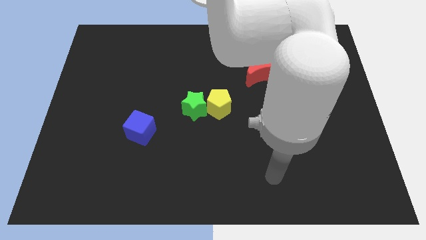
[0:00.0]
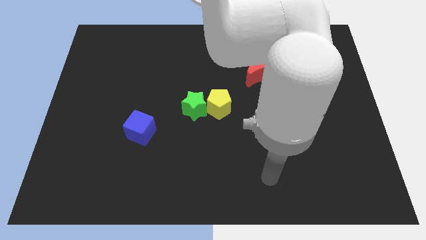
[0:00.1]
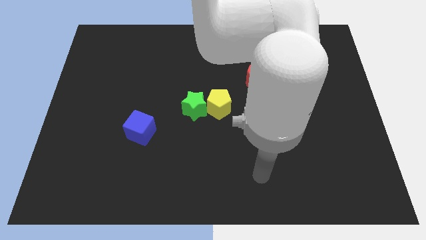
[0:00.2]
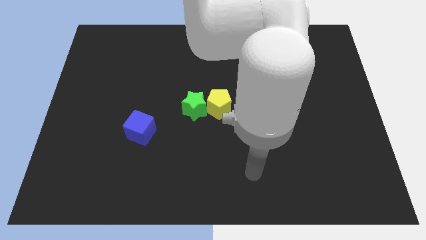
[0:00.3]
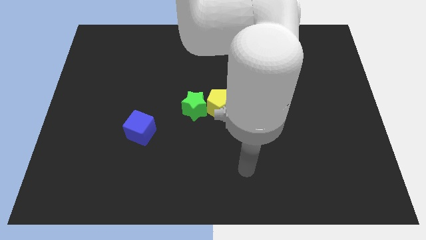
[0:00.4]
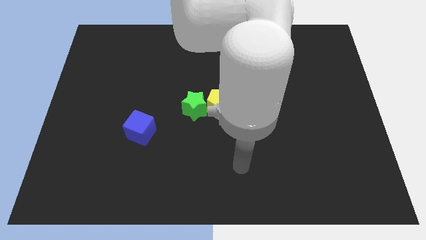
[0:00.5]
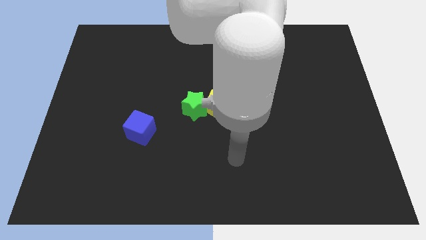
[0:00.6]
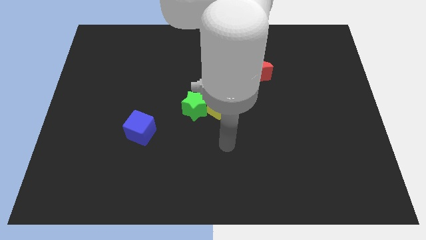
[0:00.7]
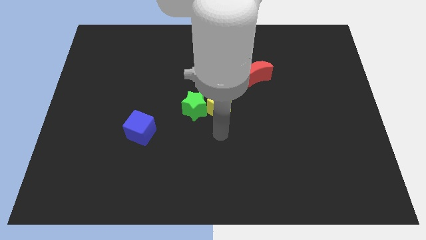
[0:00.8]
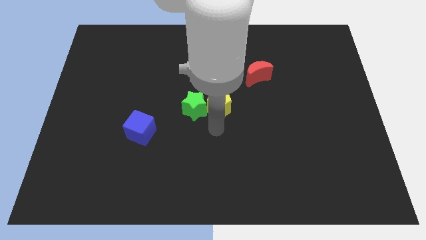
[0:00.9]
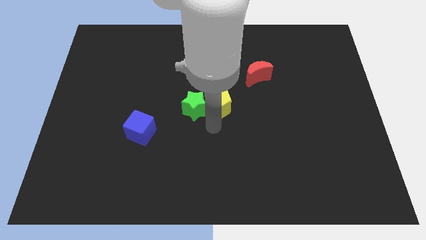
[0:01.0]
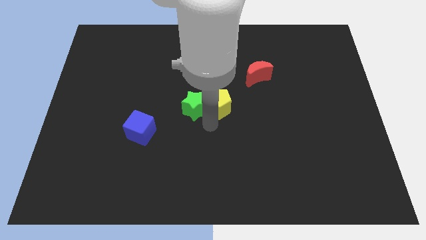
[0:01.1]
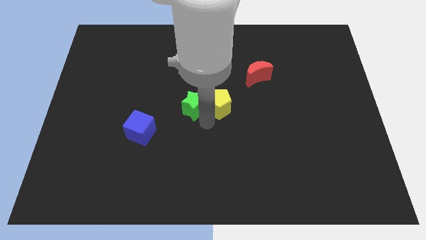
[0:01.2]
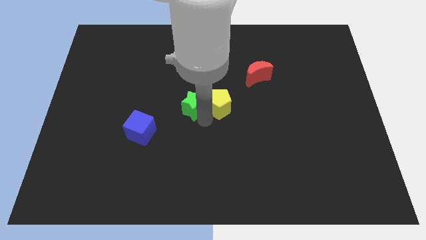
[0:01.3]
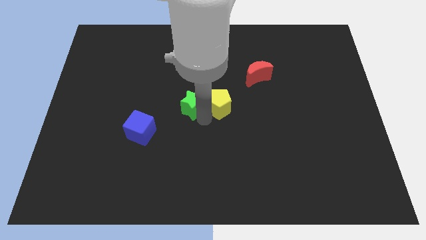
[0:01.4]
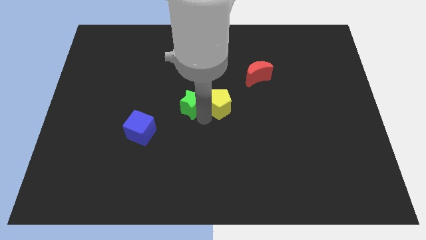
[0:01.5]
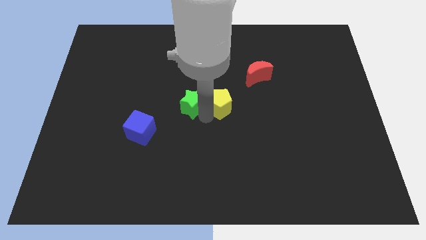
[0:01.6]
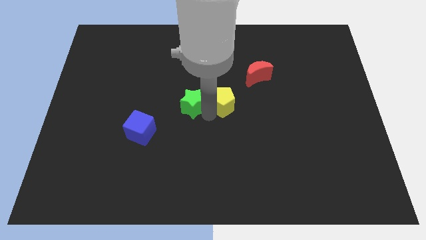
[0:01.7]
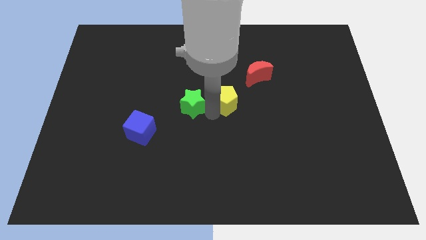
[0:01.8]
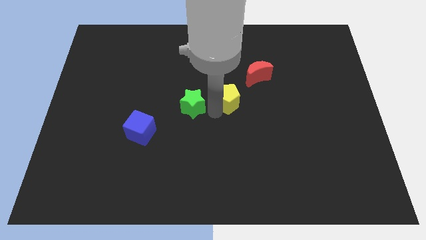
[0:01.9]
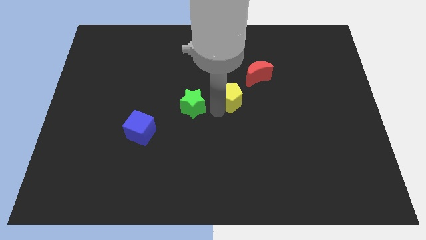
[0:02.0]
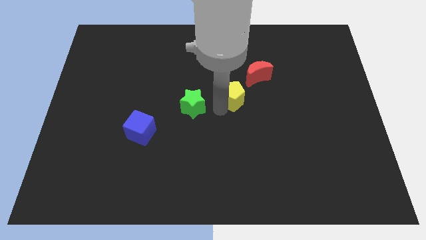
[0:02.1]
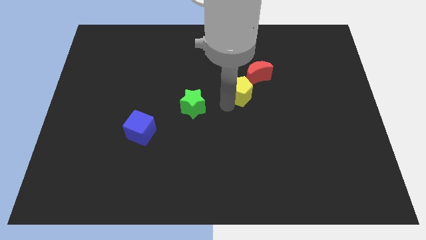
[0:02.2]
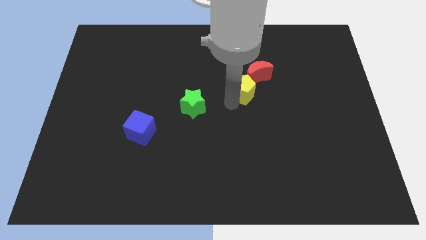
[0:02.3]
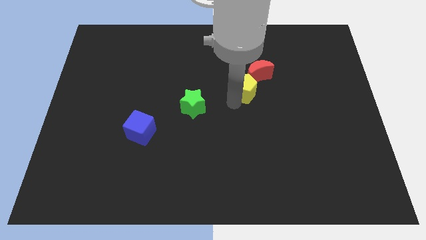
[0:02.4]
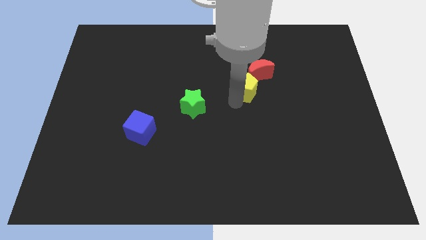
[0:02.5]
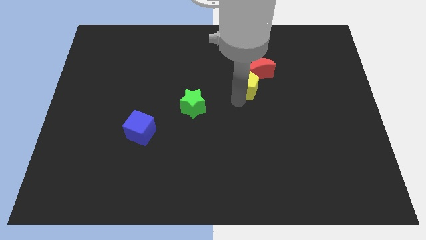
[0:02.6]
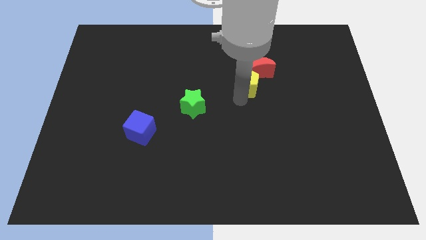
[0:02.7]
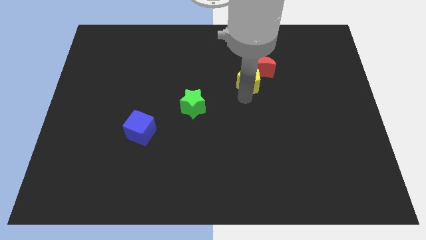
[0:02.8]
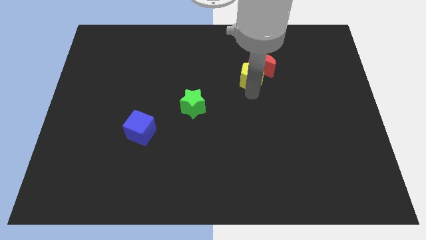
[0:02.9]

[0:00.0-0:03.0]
slide the yellow block to the moon

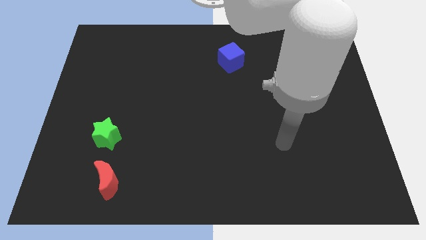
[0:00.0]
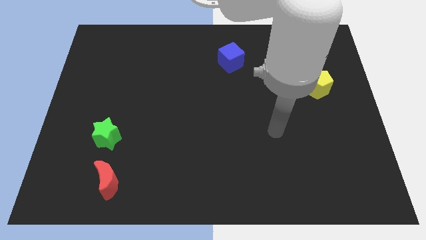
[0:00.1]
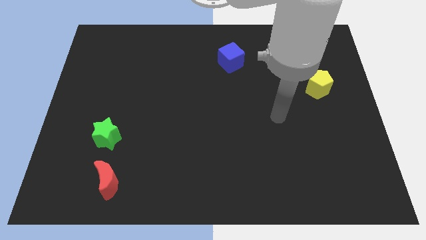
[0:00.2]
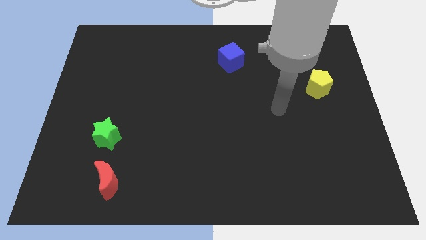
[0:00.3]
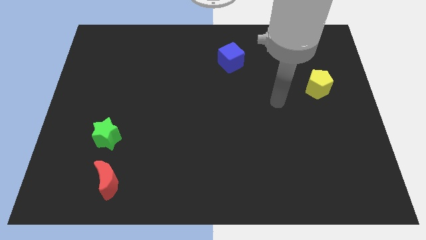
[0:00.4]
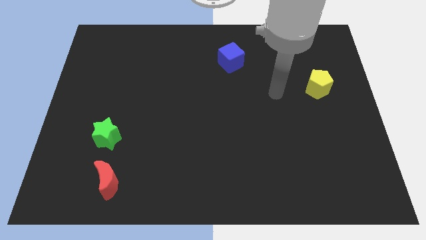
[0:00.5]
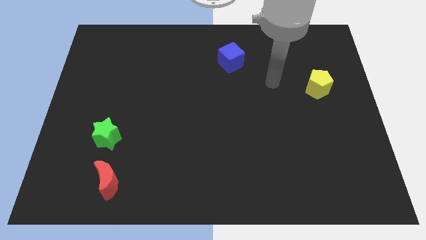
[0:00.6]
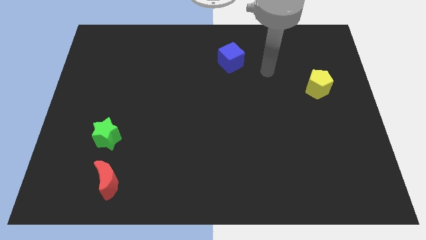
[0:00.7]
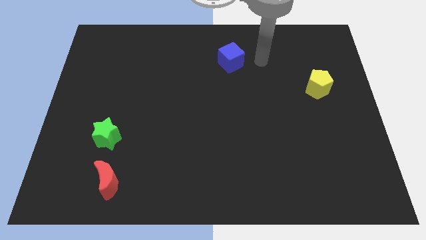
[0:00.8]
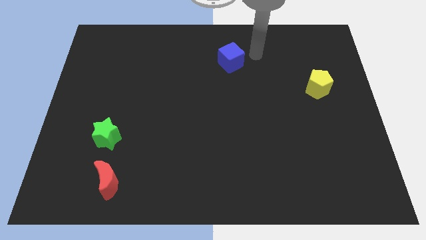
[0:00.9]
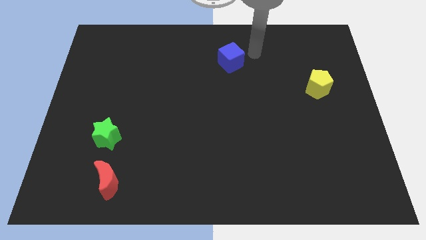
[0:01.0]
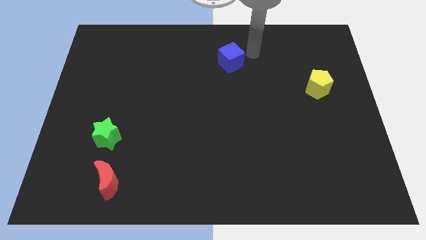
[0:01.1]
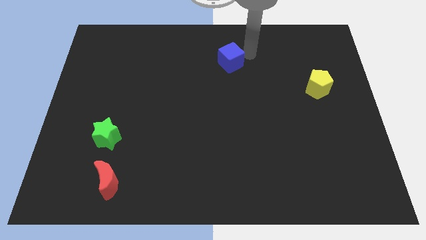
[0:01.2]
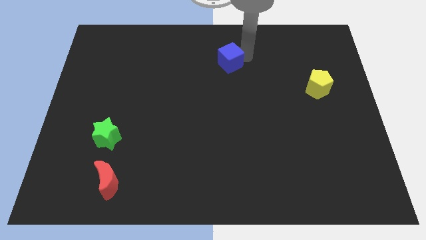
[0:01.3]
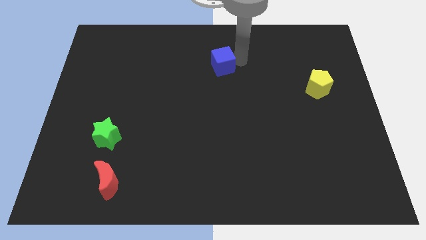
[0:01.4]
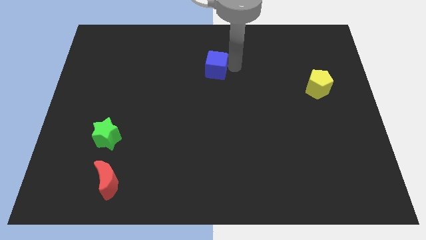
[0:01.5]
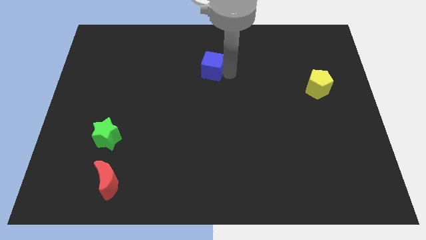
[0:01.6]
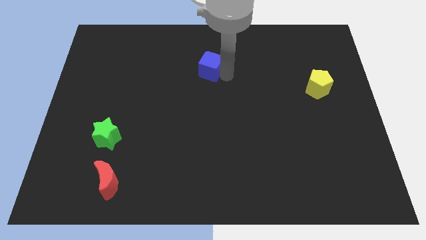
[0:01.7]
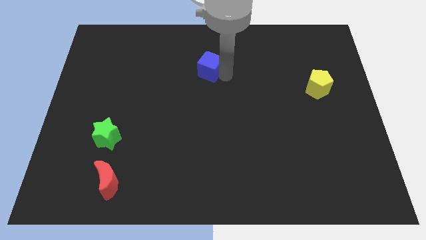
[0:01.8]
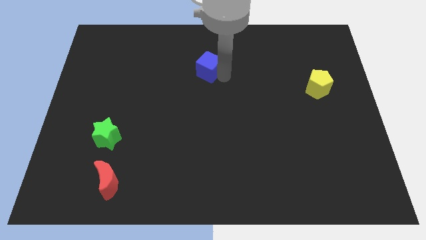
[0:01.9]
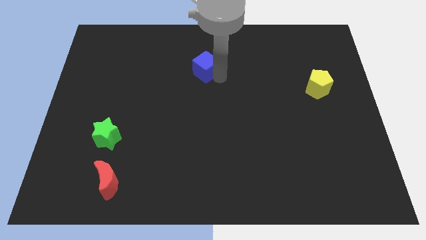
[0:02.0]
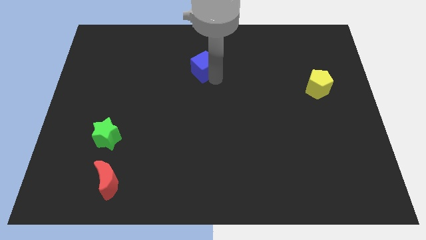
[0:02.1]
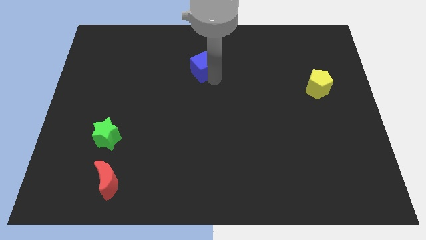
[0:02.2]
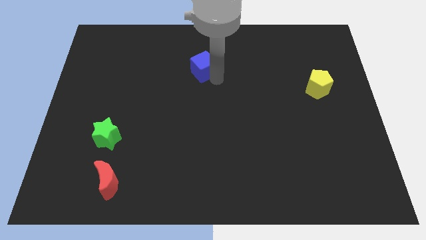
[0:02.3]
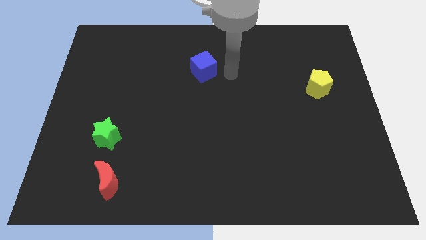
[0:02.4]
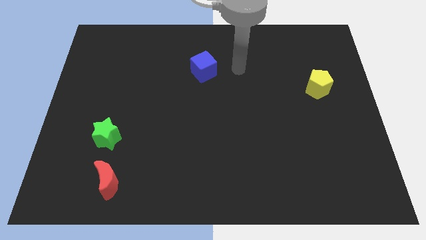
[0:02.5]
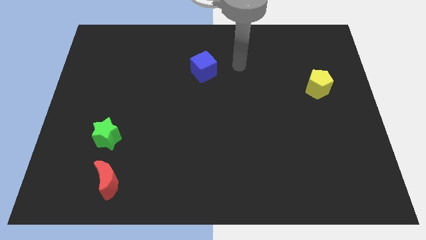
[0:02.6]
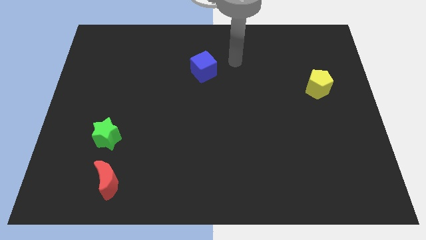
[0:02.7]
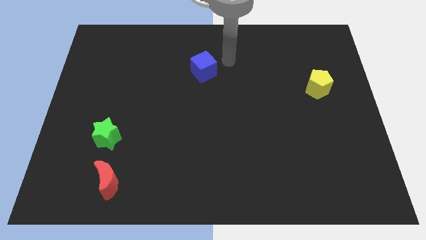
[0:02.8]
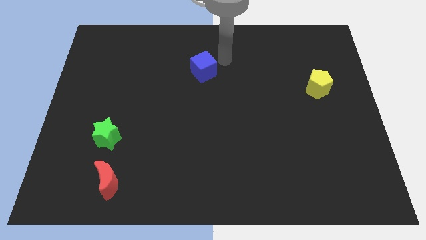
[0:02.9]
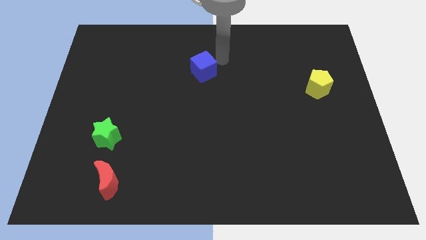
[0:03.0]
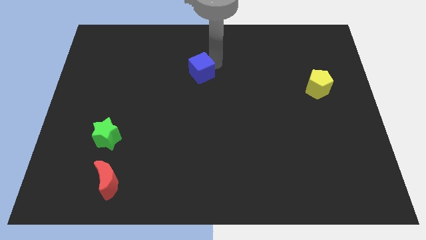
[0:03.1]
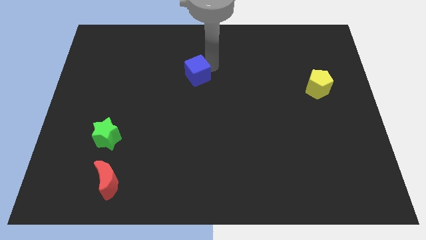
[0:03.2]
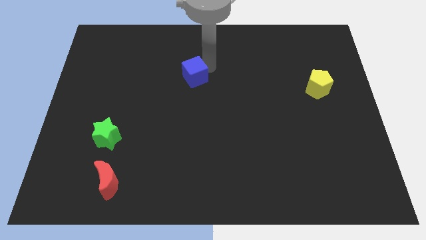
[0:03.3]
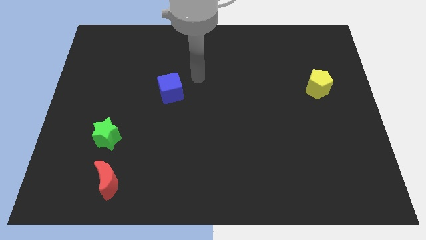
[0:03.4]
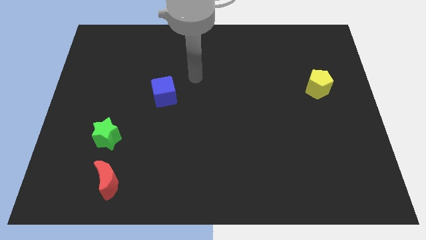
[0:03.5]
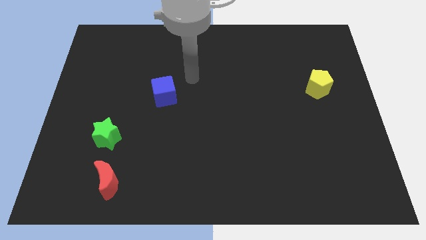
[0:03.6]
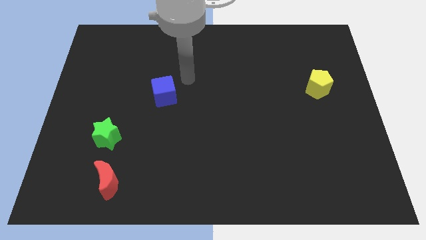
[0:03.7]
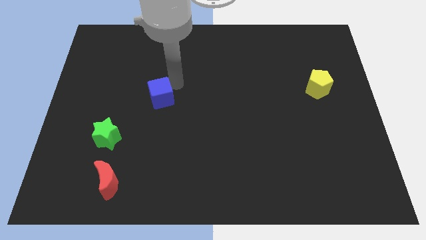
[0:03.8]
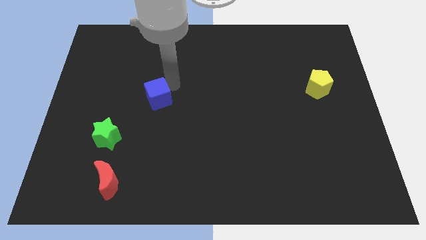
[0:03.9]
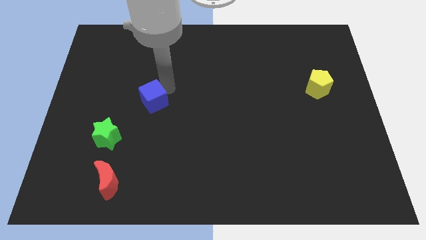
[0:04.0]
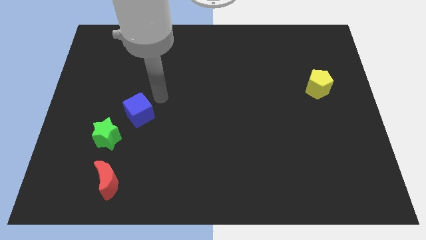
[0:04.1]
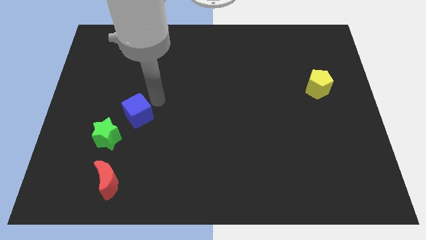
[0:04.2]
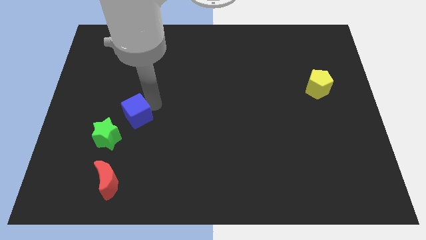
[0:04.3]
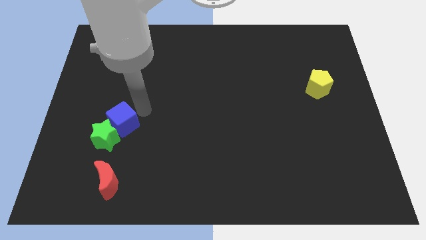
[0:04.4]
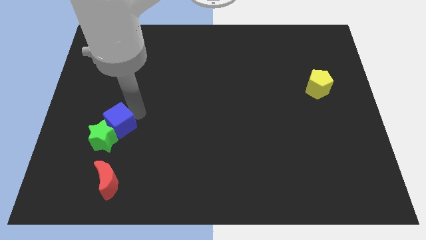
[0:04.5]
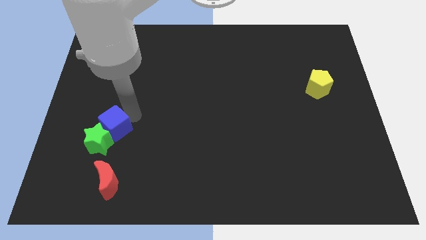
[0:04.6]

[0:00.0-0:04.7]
slide the cube towards the green block

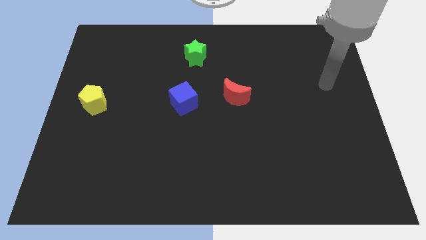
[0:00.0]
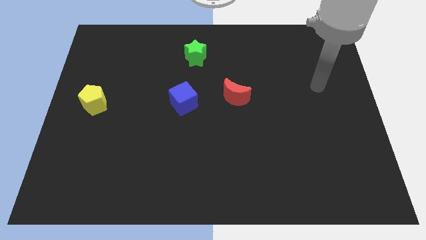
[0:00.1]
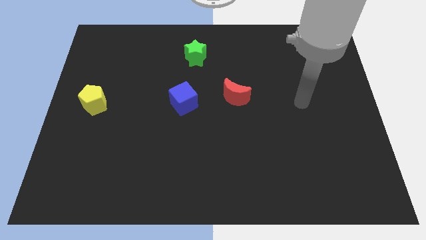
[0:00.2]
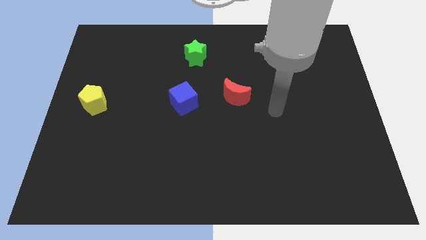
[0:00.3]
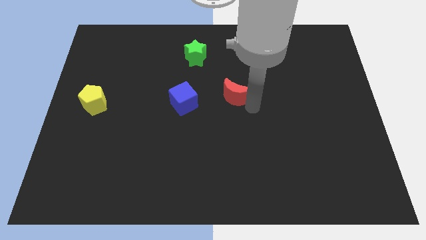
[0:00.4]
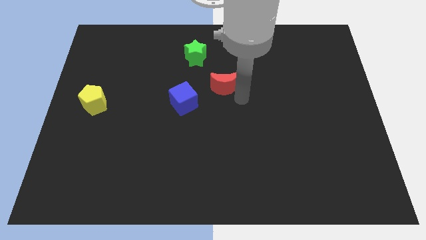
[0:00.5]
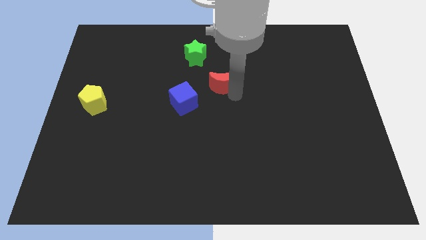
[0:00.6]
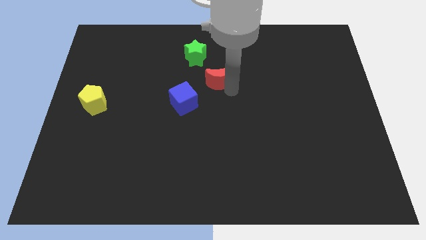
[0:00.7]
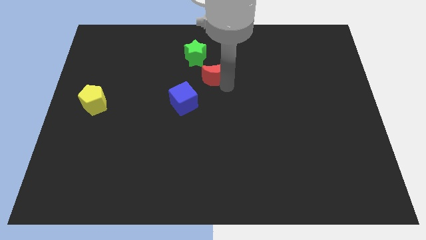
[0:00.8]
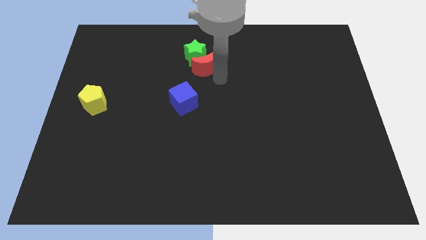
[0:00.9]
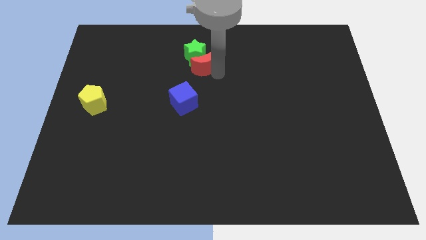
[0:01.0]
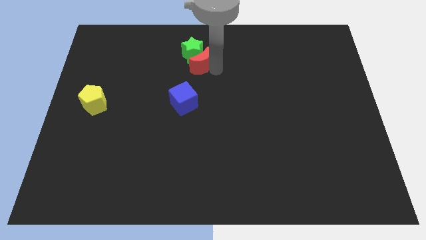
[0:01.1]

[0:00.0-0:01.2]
put the moon next to the green block
